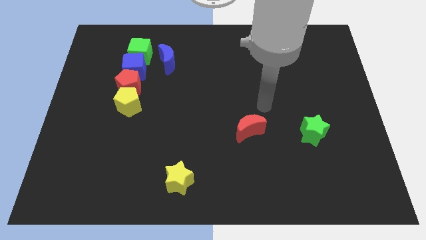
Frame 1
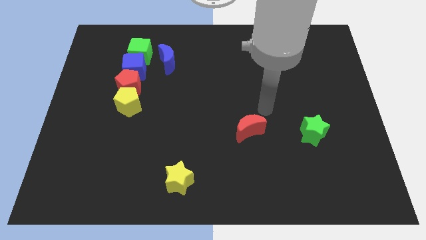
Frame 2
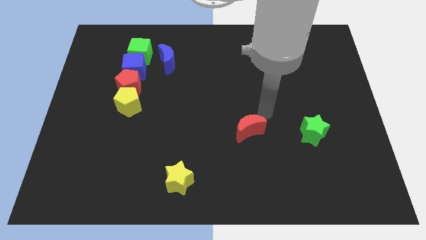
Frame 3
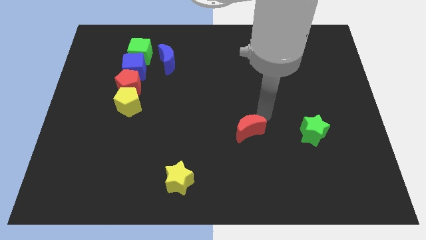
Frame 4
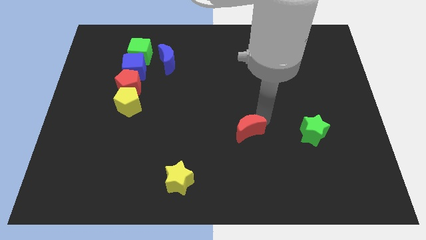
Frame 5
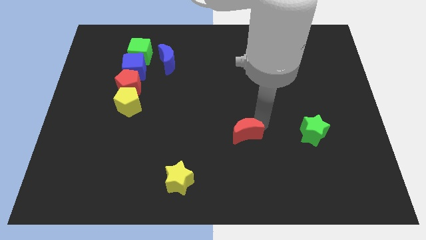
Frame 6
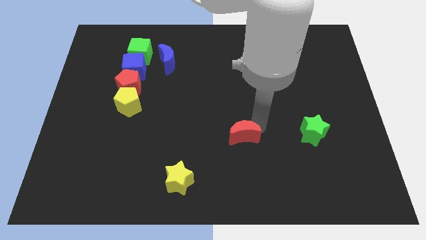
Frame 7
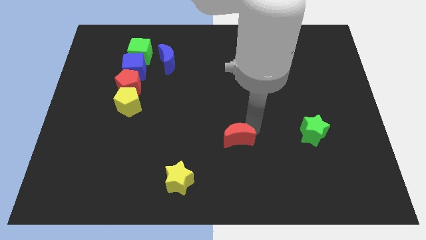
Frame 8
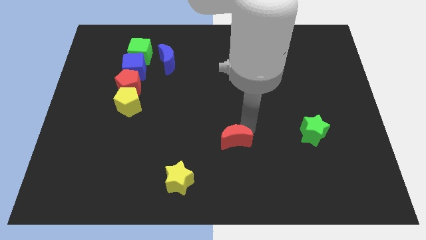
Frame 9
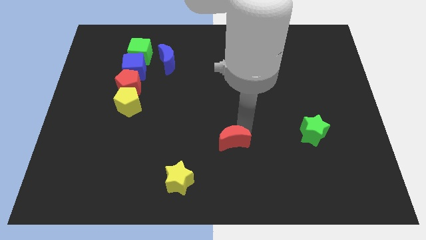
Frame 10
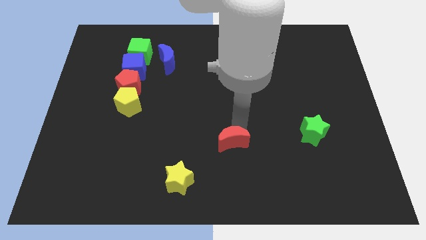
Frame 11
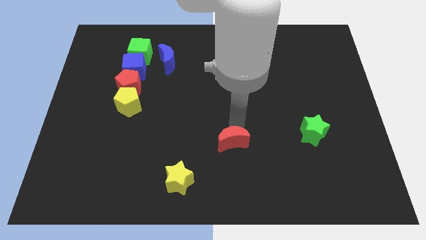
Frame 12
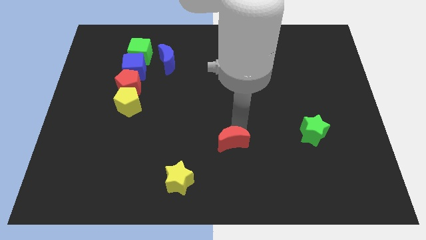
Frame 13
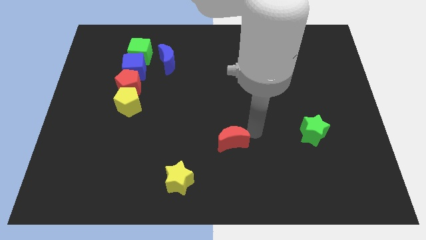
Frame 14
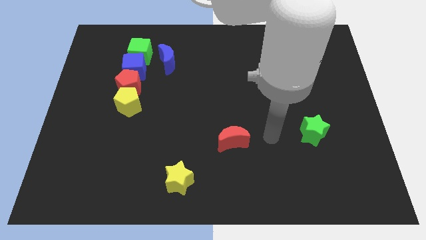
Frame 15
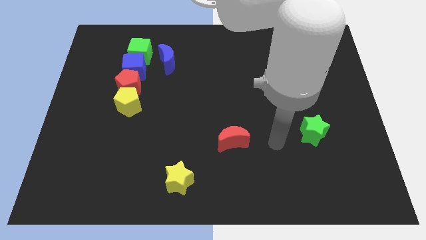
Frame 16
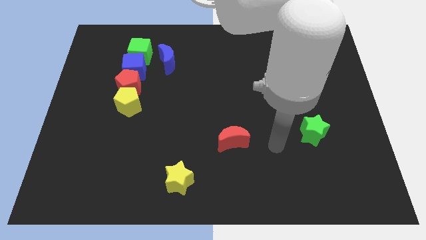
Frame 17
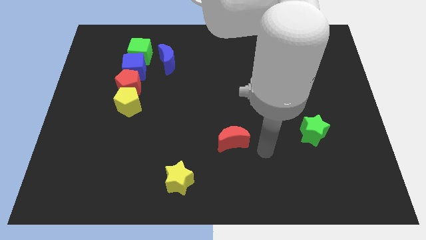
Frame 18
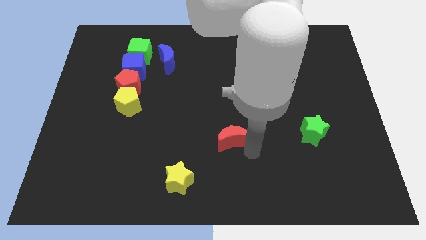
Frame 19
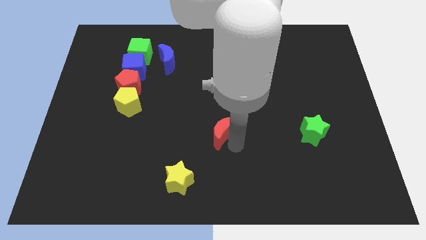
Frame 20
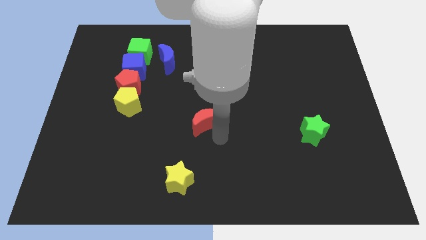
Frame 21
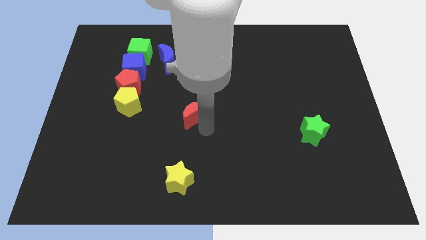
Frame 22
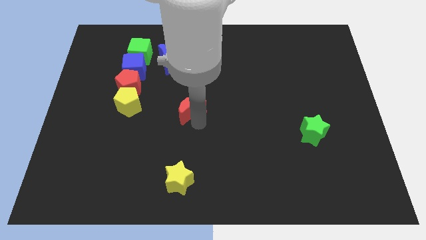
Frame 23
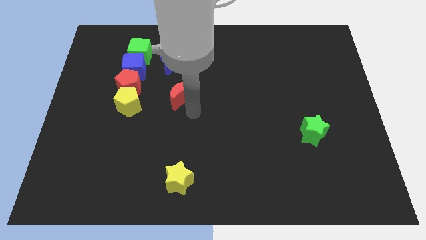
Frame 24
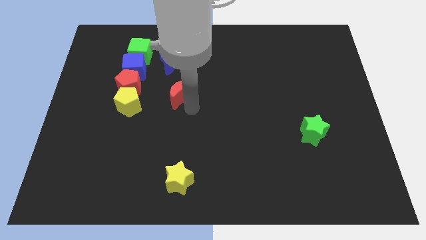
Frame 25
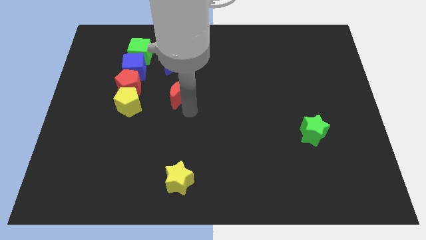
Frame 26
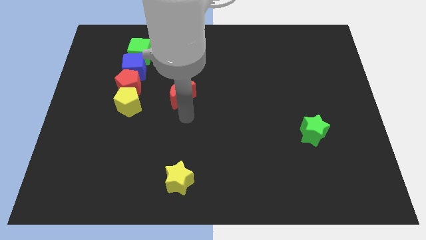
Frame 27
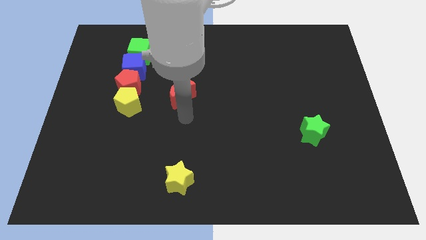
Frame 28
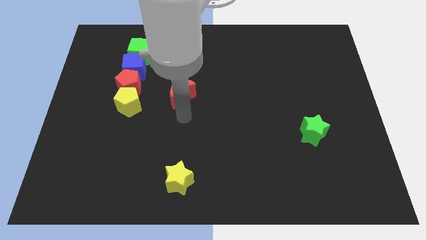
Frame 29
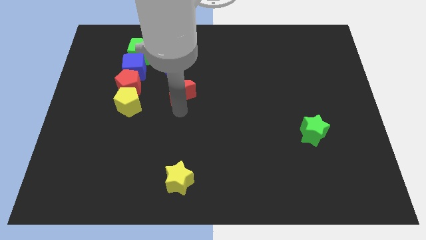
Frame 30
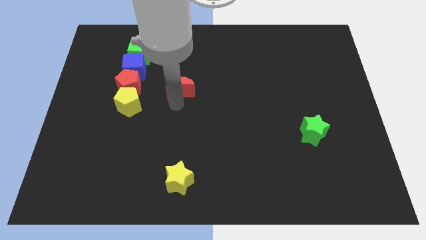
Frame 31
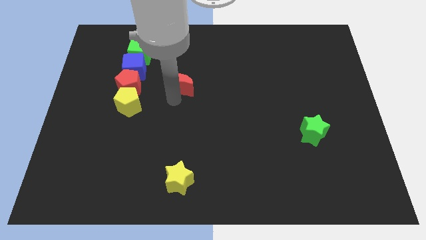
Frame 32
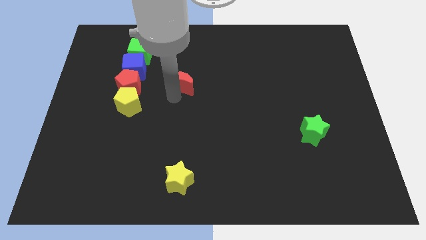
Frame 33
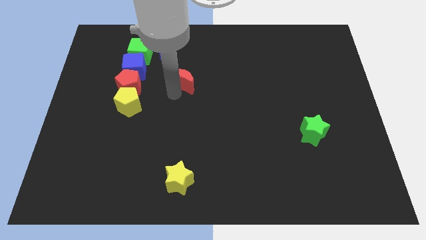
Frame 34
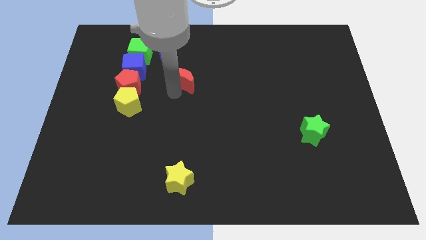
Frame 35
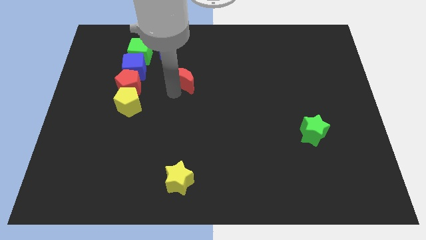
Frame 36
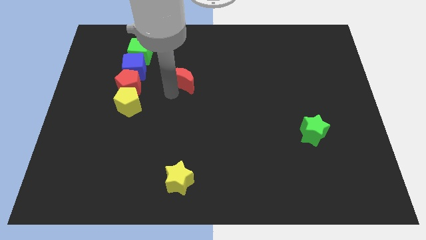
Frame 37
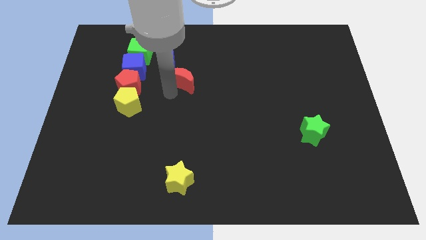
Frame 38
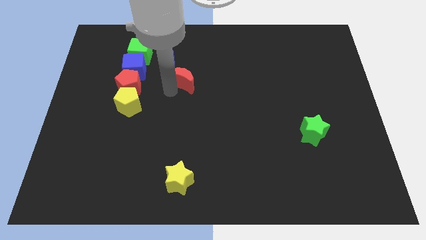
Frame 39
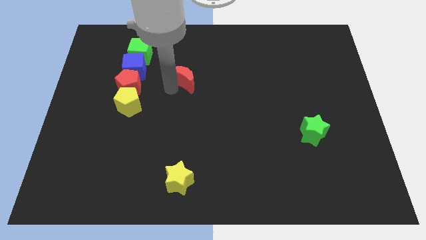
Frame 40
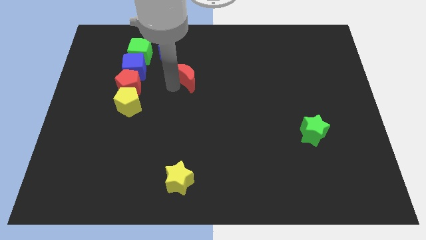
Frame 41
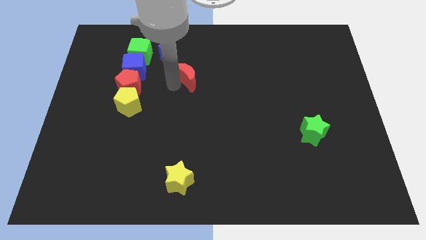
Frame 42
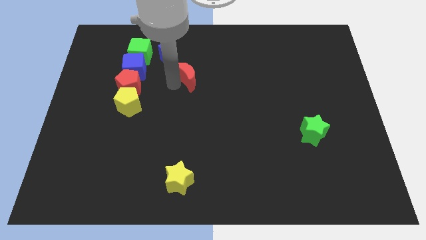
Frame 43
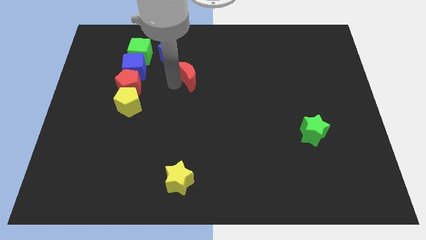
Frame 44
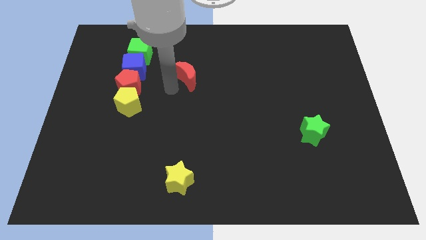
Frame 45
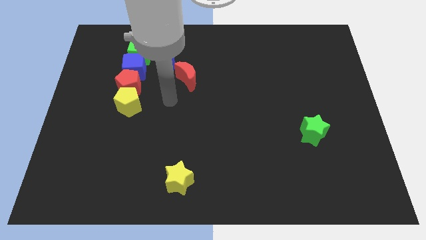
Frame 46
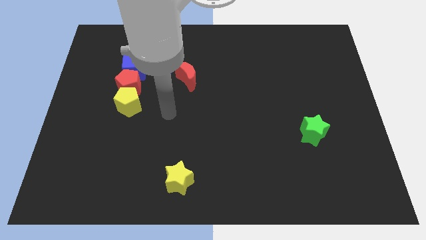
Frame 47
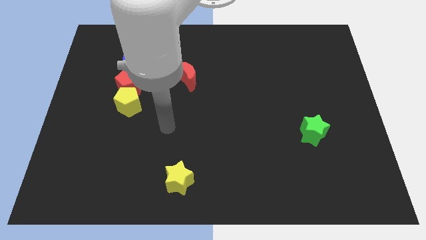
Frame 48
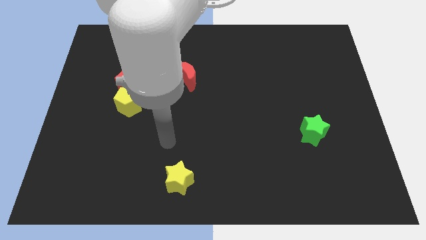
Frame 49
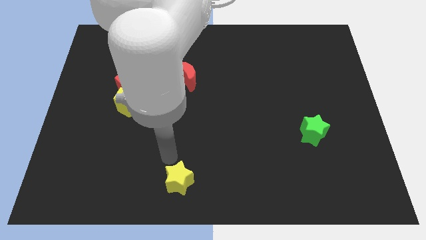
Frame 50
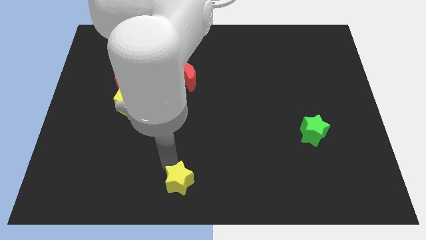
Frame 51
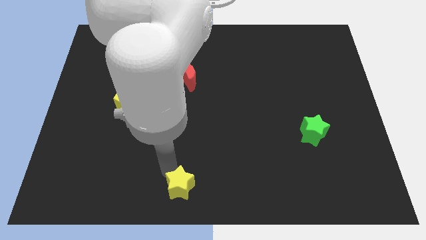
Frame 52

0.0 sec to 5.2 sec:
place the red moon to the right bottom of blue moon

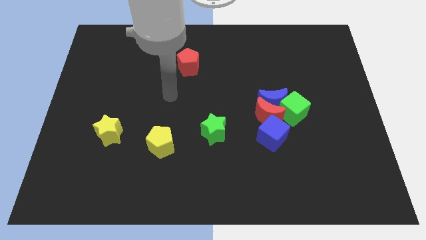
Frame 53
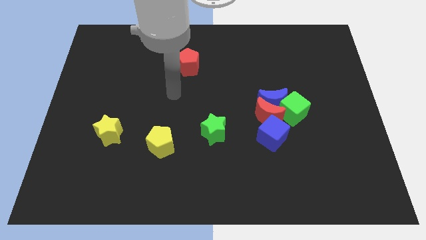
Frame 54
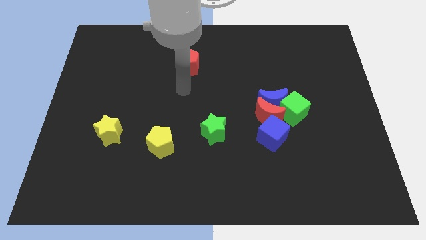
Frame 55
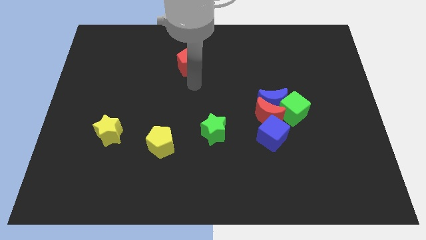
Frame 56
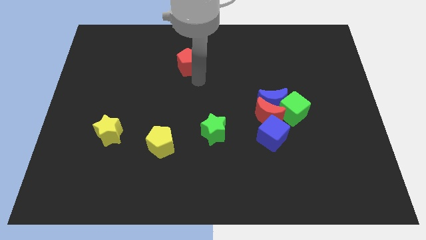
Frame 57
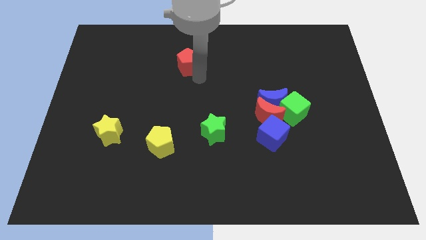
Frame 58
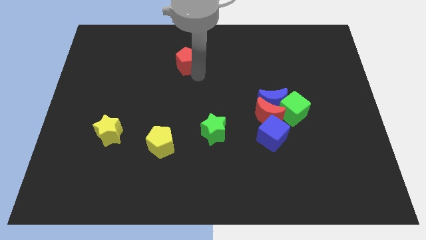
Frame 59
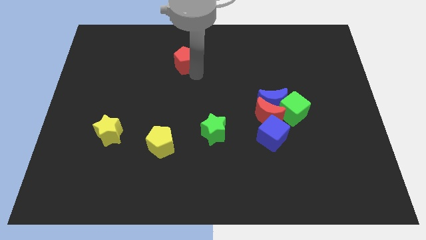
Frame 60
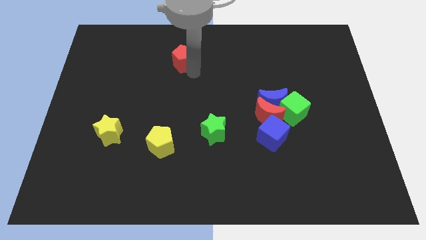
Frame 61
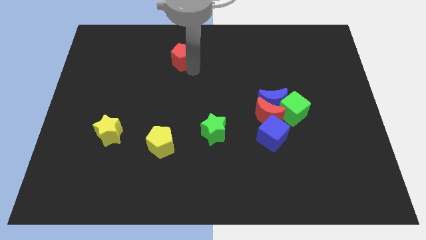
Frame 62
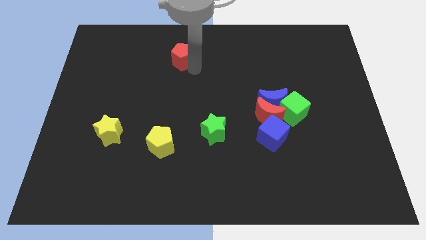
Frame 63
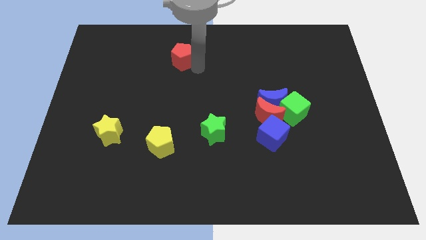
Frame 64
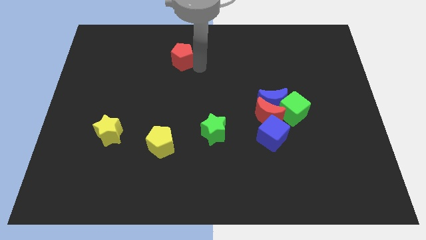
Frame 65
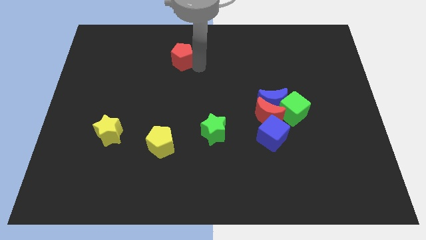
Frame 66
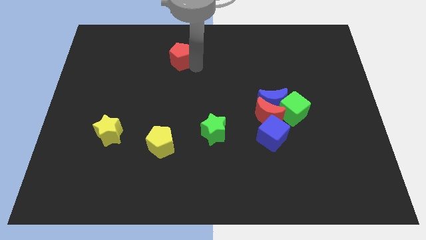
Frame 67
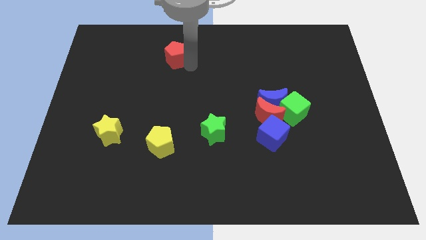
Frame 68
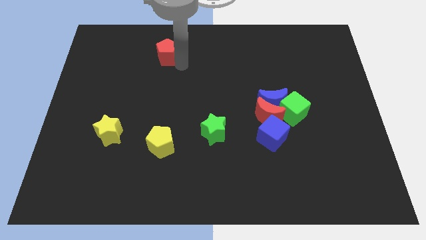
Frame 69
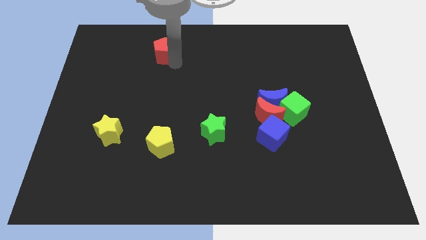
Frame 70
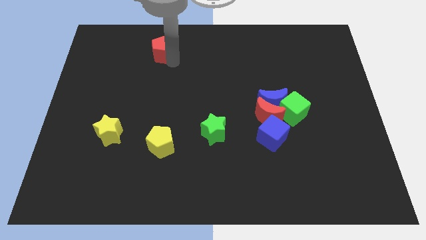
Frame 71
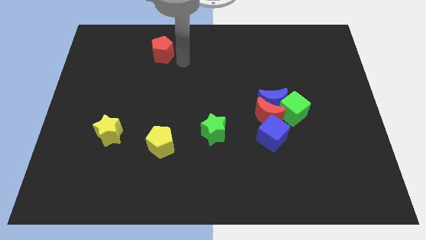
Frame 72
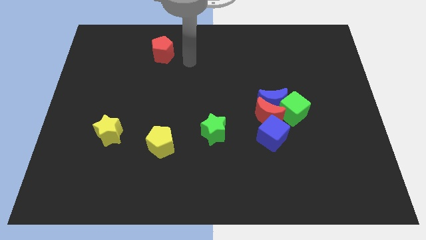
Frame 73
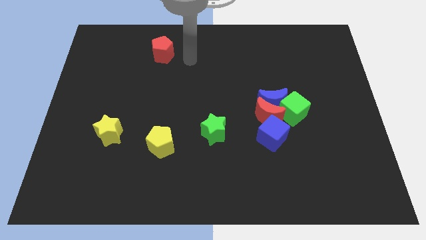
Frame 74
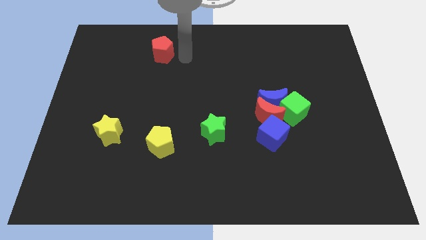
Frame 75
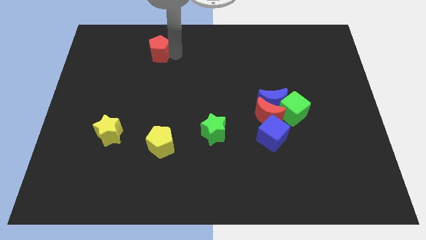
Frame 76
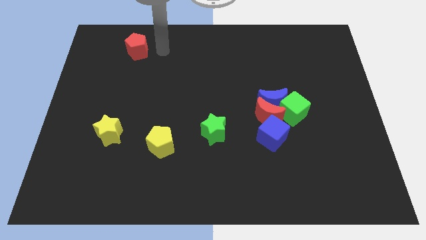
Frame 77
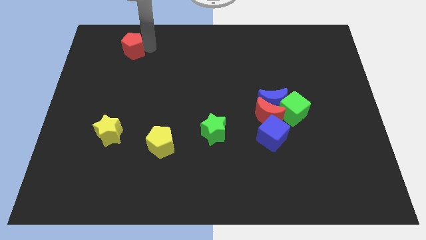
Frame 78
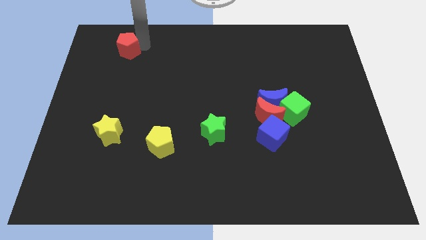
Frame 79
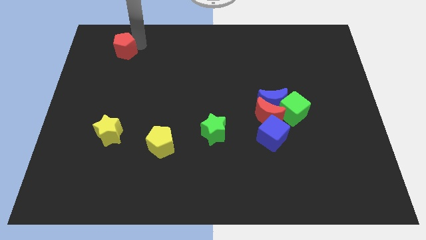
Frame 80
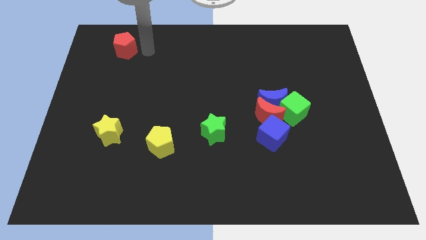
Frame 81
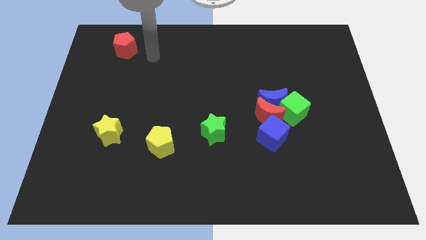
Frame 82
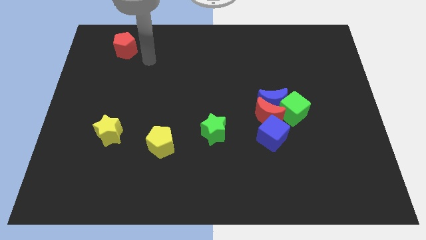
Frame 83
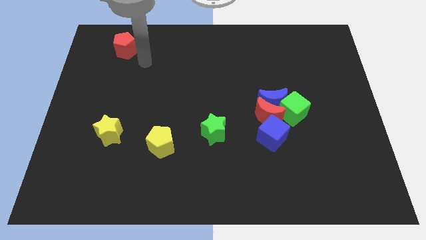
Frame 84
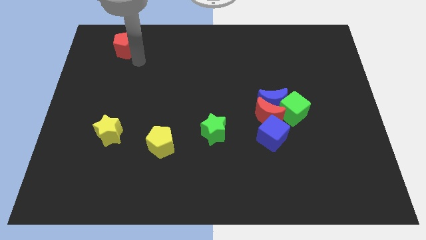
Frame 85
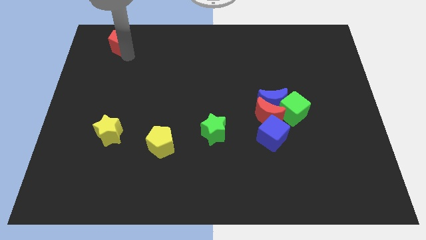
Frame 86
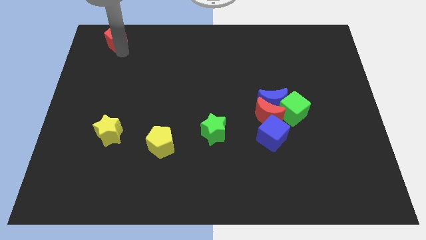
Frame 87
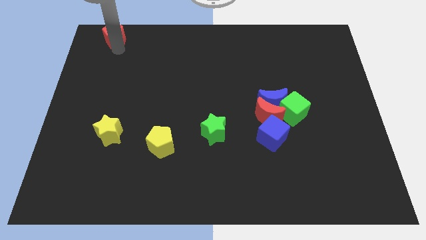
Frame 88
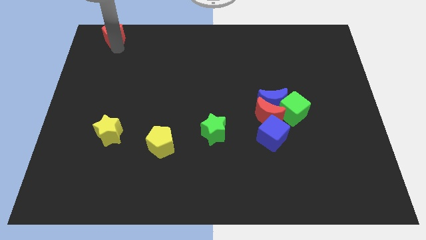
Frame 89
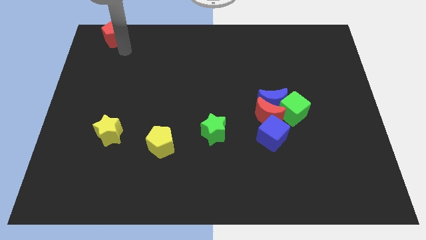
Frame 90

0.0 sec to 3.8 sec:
move the red pentagon towards top left side of the board
